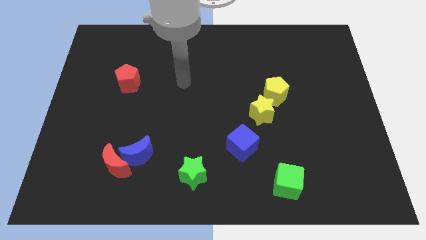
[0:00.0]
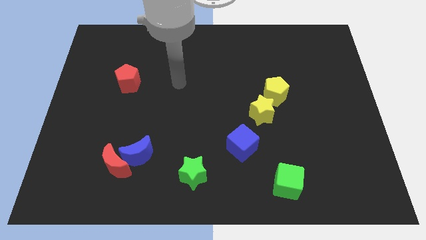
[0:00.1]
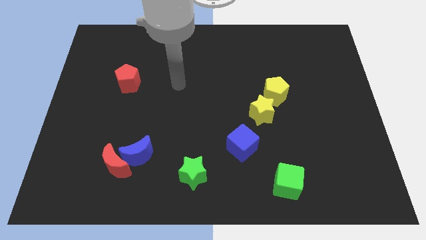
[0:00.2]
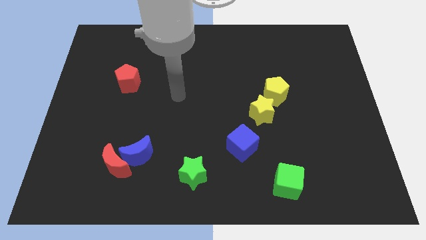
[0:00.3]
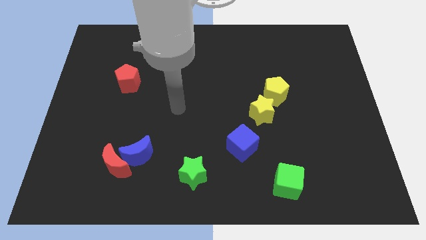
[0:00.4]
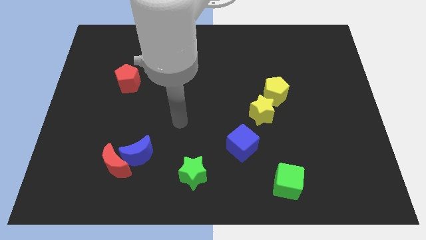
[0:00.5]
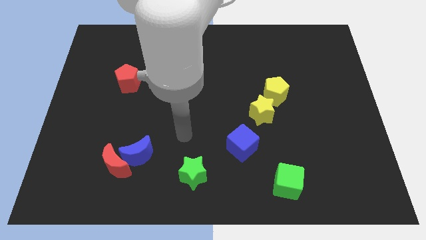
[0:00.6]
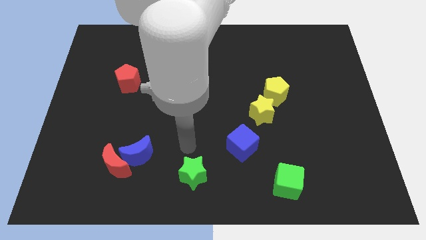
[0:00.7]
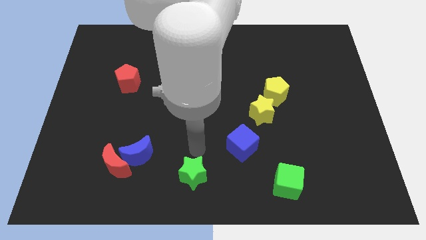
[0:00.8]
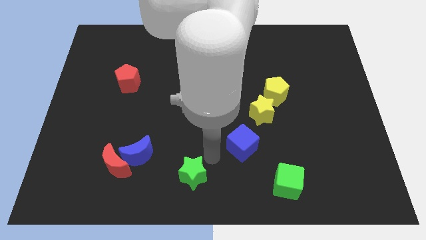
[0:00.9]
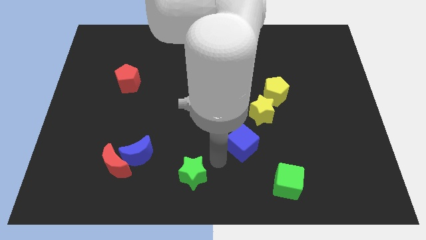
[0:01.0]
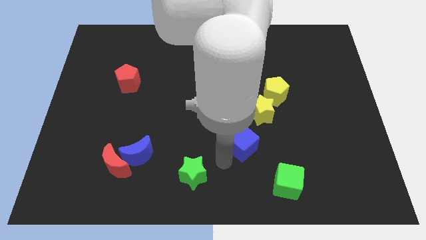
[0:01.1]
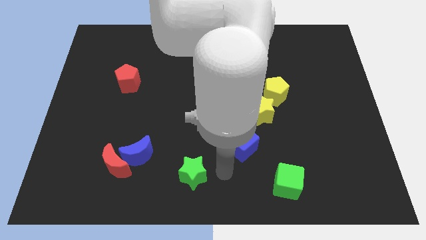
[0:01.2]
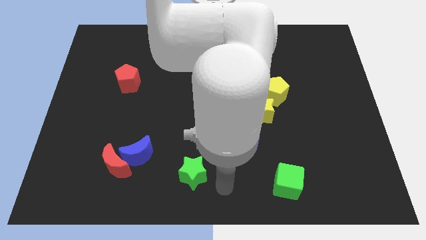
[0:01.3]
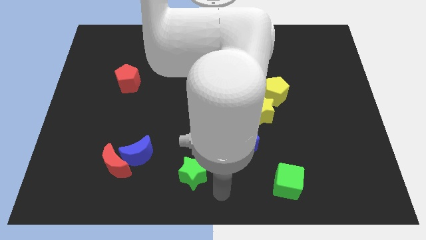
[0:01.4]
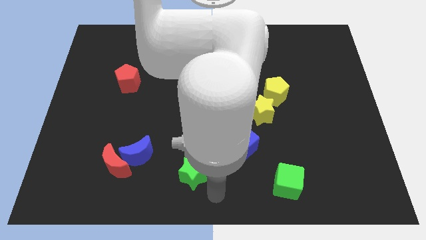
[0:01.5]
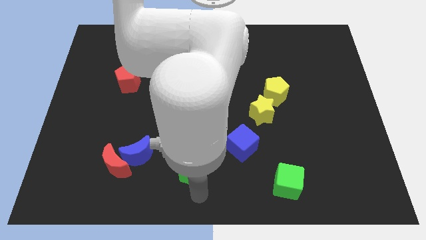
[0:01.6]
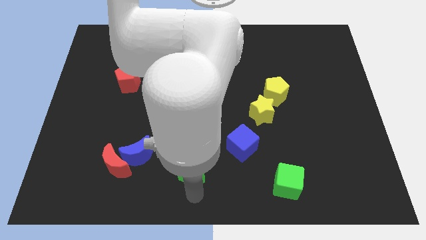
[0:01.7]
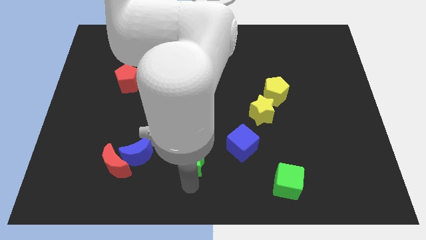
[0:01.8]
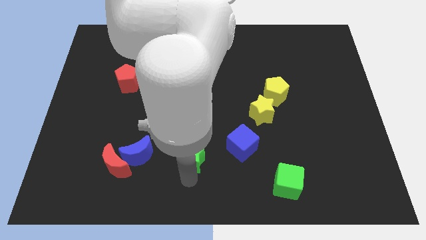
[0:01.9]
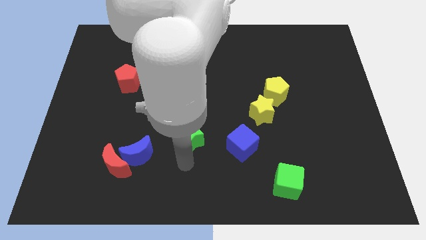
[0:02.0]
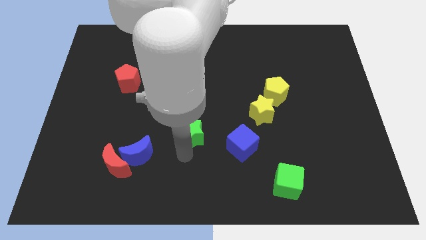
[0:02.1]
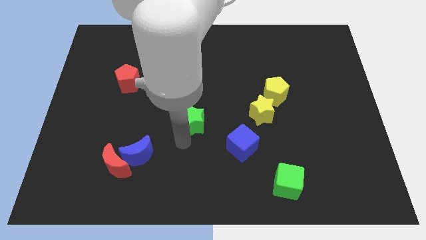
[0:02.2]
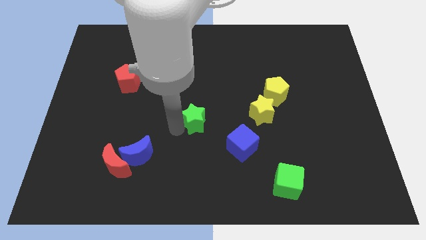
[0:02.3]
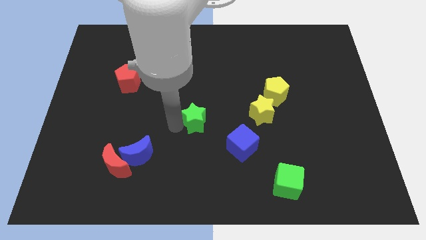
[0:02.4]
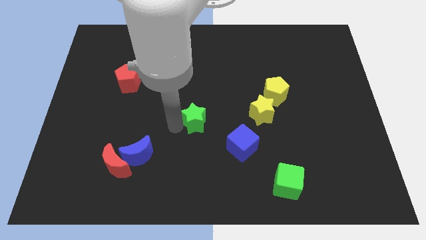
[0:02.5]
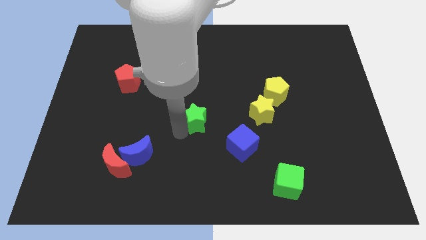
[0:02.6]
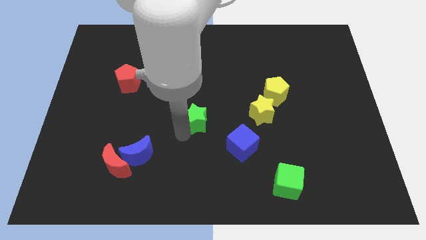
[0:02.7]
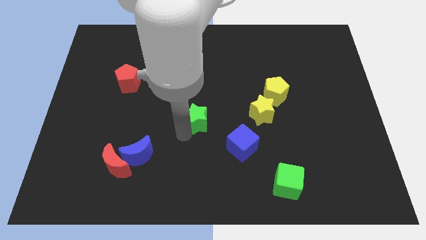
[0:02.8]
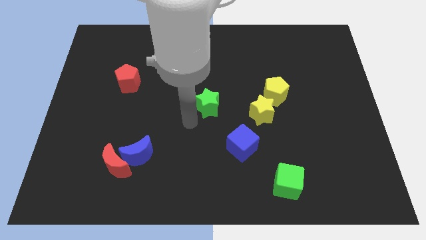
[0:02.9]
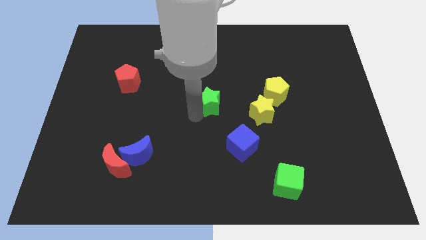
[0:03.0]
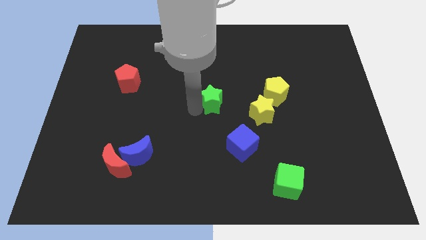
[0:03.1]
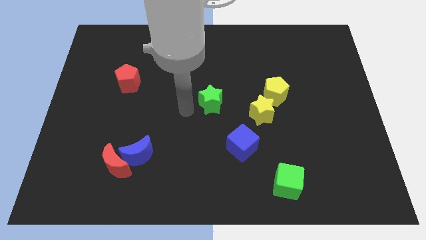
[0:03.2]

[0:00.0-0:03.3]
place the green star at the center of the board

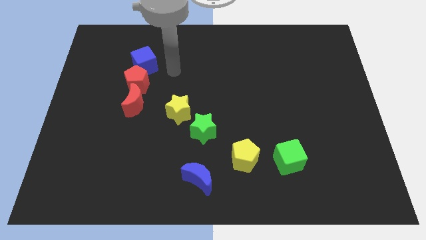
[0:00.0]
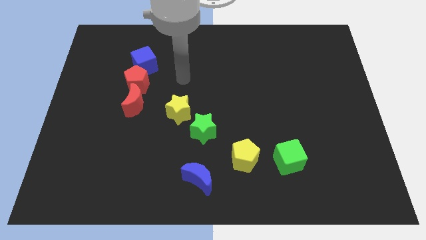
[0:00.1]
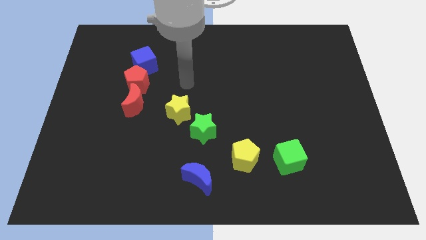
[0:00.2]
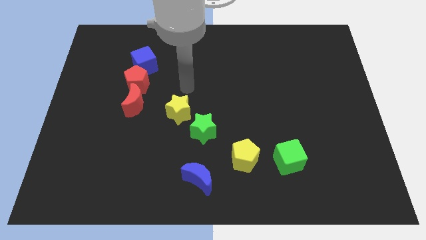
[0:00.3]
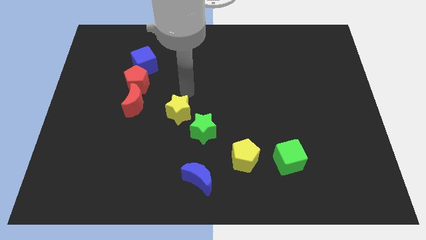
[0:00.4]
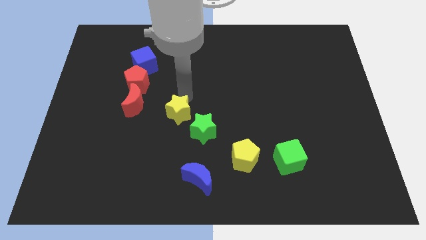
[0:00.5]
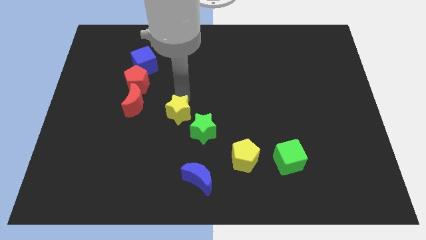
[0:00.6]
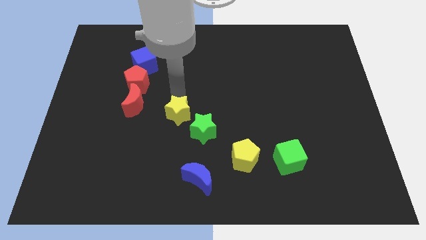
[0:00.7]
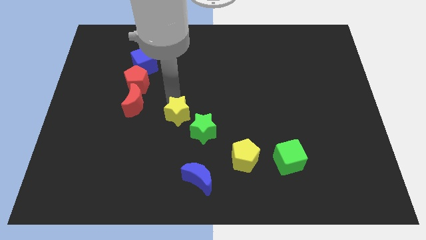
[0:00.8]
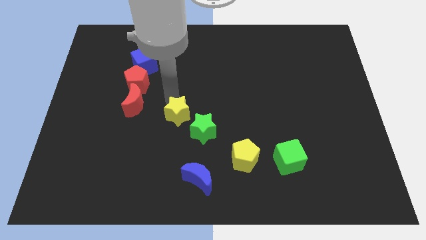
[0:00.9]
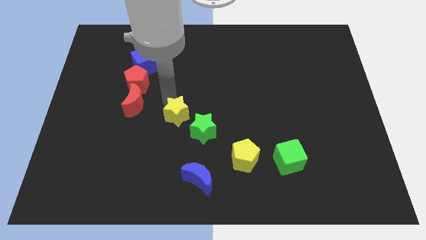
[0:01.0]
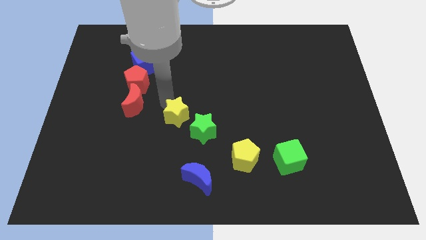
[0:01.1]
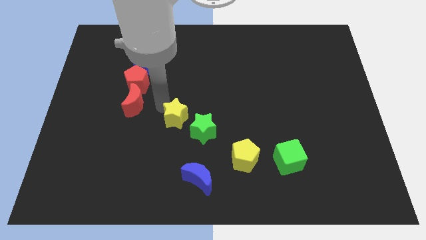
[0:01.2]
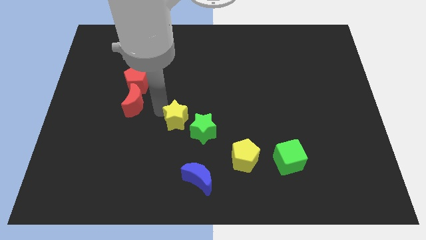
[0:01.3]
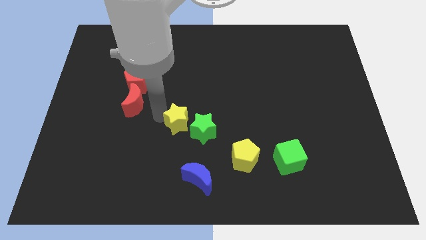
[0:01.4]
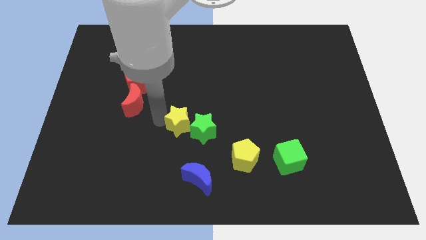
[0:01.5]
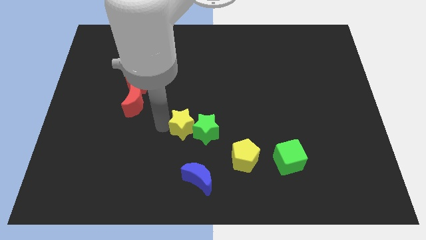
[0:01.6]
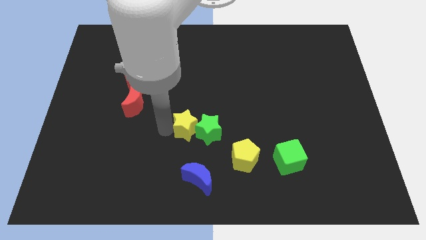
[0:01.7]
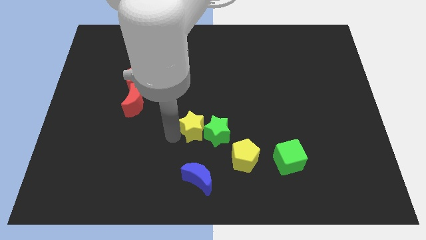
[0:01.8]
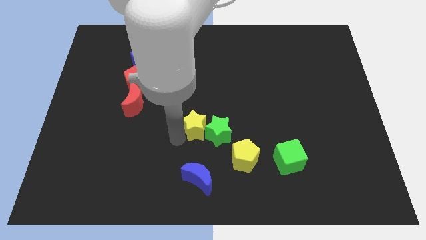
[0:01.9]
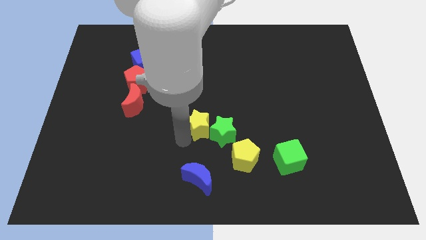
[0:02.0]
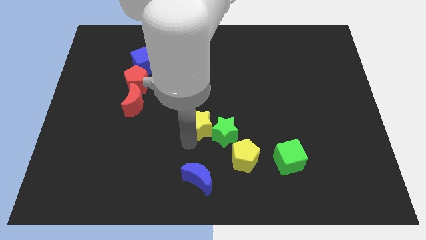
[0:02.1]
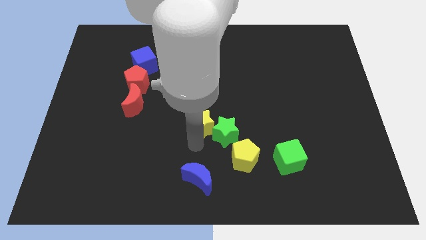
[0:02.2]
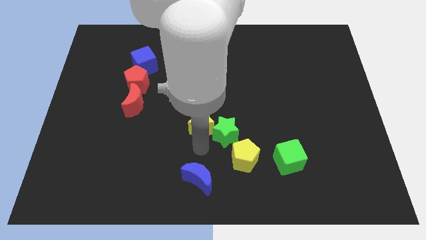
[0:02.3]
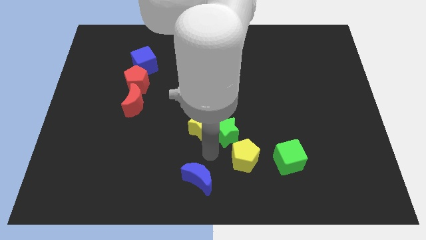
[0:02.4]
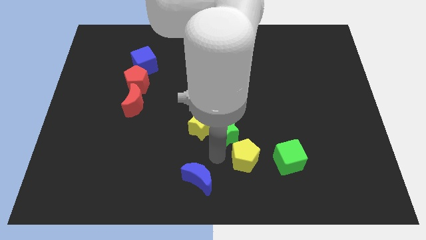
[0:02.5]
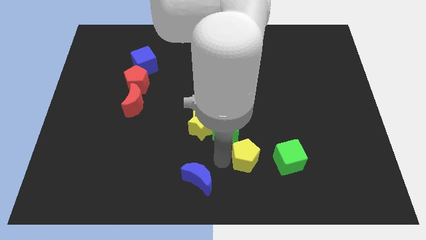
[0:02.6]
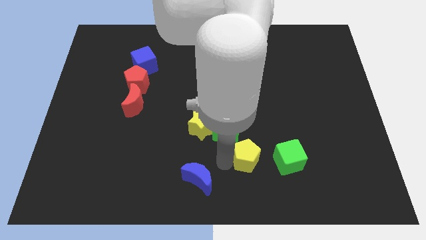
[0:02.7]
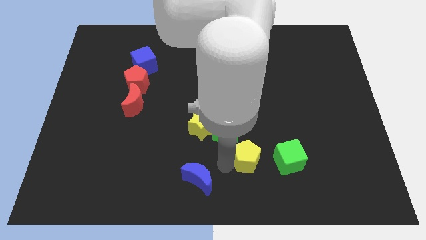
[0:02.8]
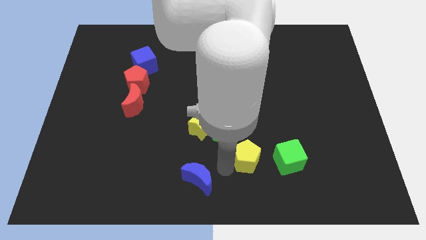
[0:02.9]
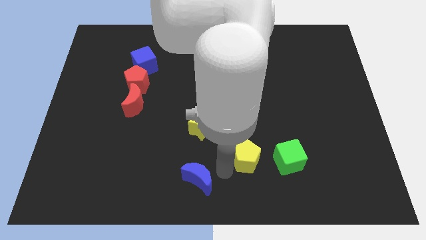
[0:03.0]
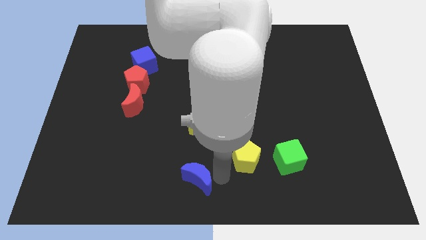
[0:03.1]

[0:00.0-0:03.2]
slightly move the yellow star to the right of the board

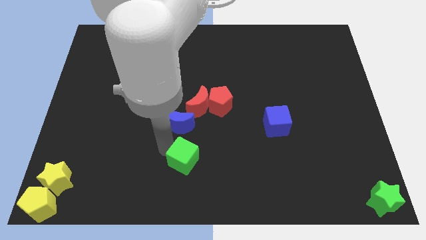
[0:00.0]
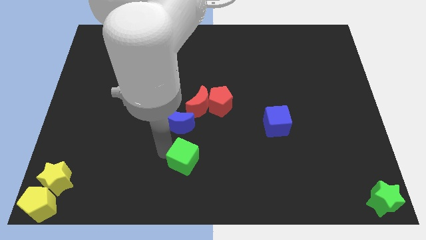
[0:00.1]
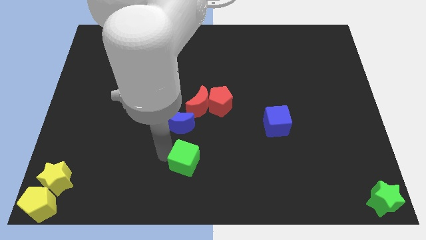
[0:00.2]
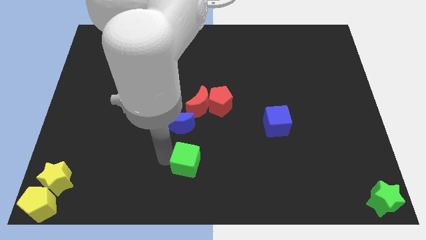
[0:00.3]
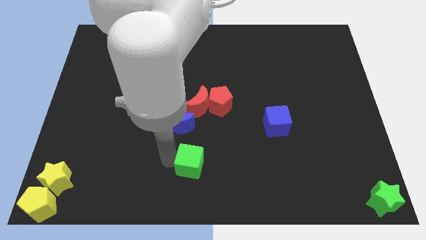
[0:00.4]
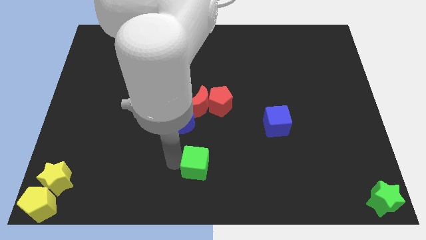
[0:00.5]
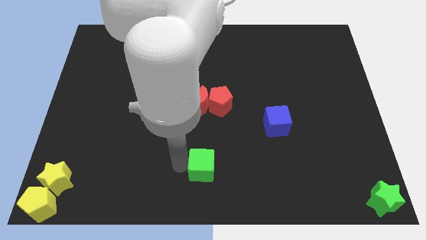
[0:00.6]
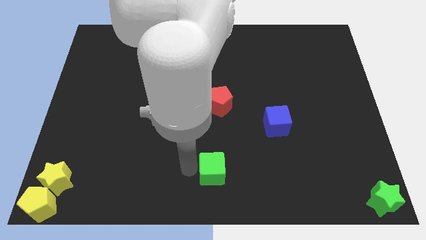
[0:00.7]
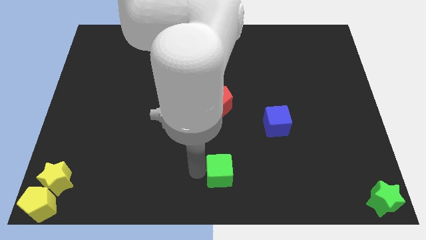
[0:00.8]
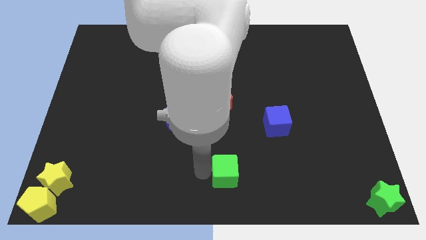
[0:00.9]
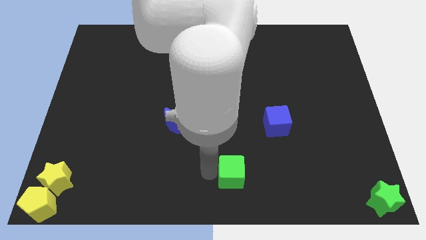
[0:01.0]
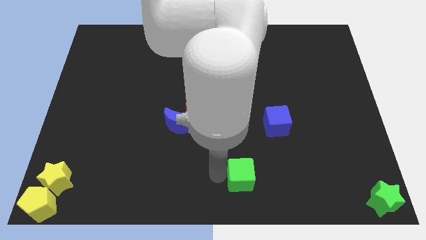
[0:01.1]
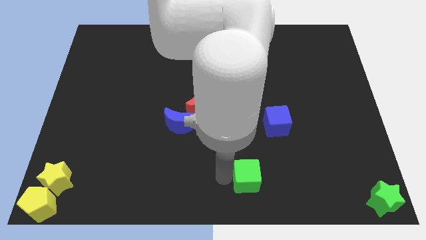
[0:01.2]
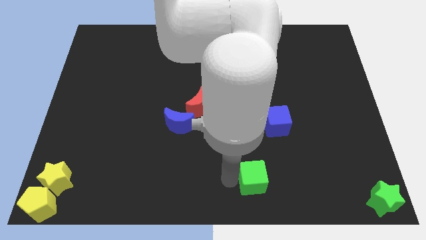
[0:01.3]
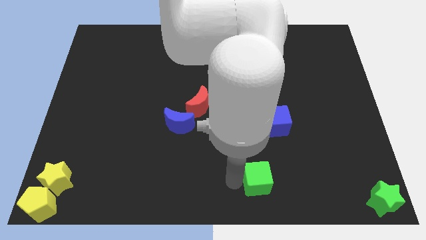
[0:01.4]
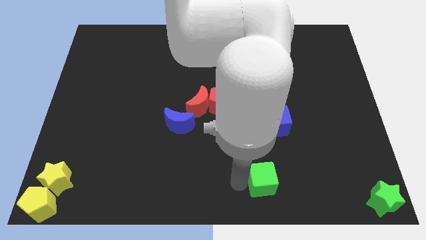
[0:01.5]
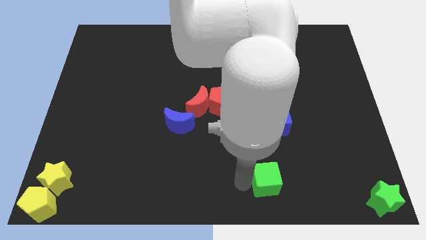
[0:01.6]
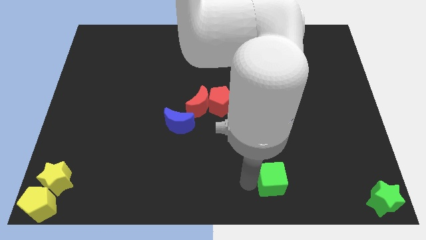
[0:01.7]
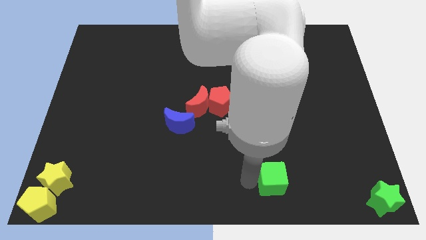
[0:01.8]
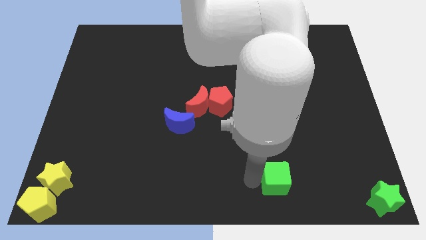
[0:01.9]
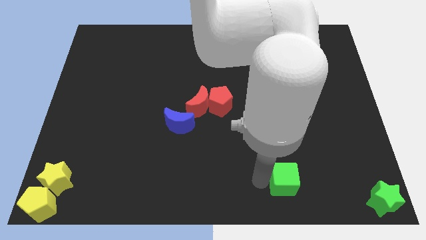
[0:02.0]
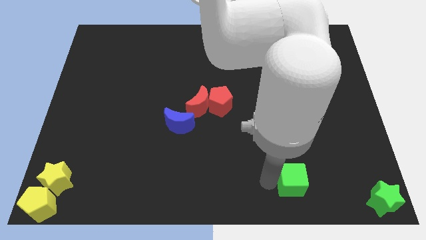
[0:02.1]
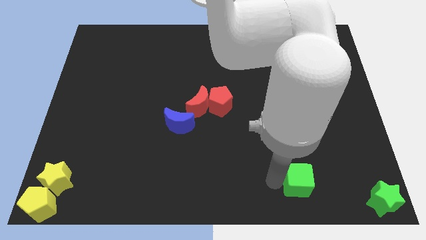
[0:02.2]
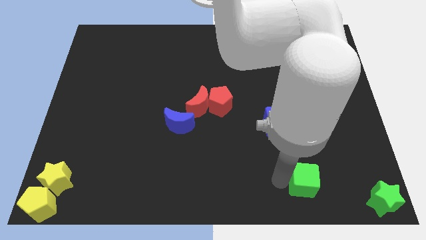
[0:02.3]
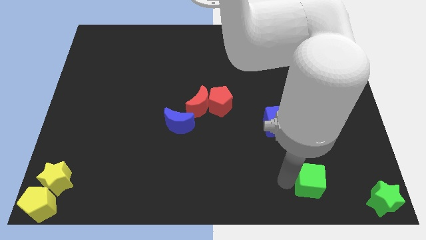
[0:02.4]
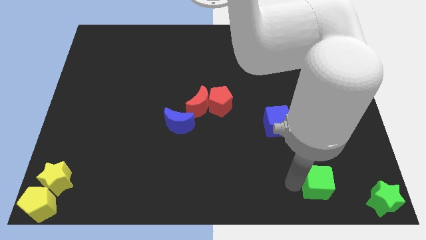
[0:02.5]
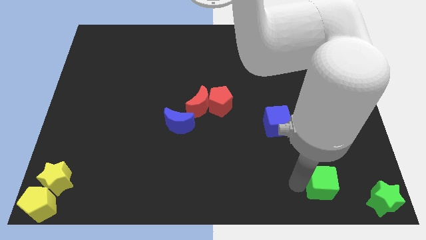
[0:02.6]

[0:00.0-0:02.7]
move the green cube to the bottom right side of the board
